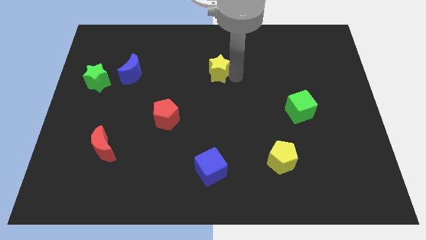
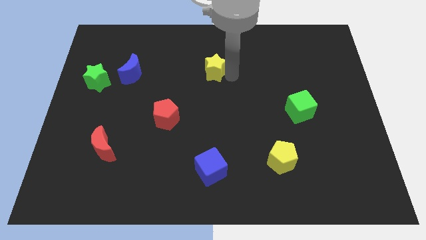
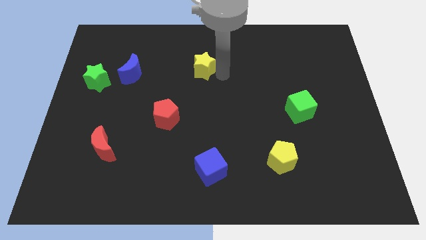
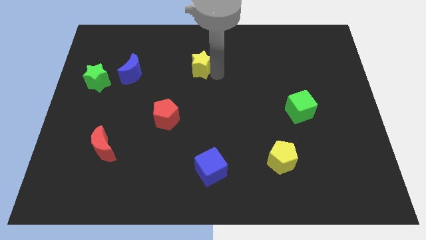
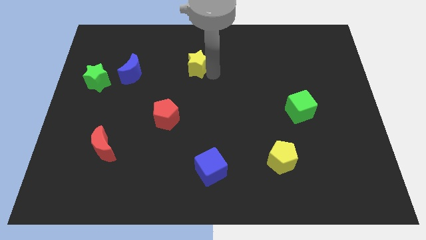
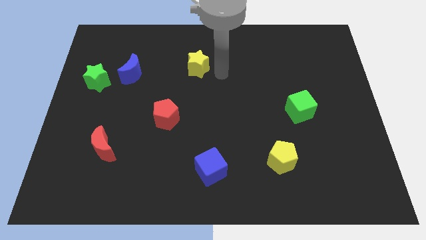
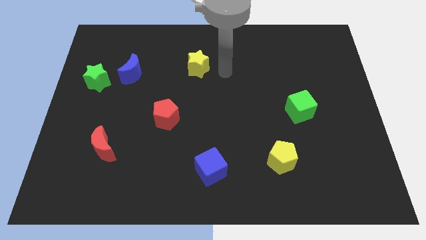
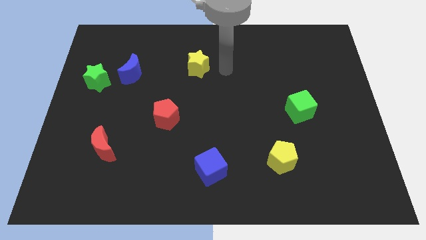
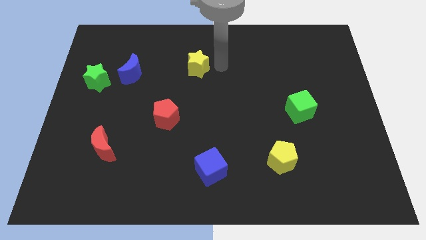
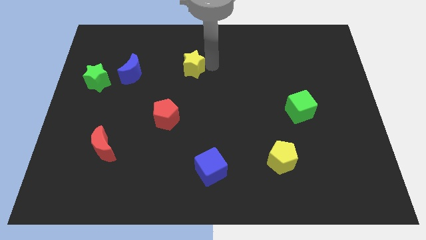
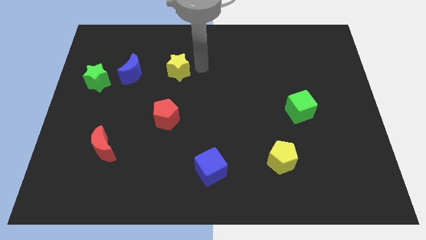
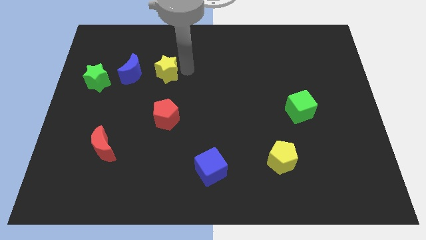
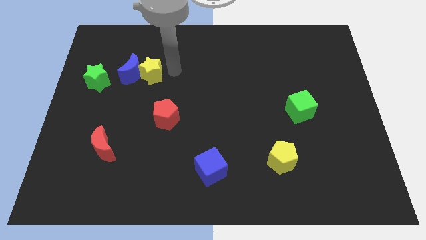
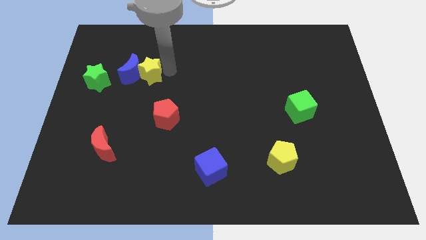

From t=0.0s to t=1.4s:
move the yellow star to the right of the blue crescent

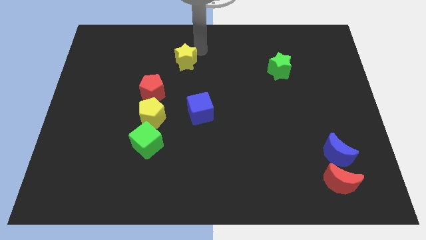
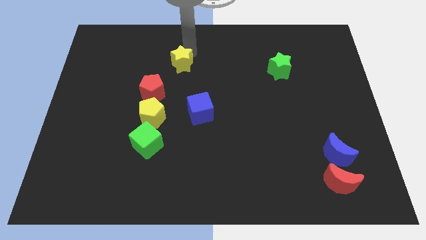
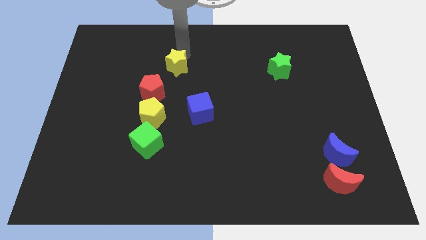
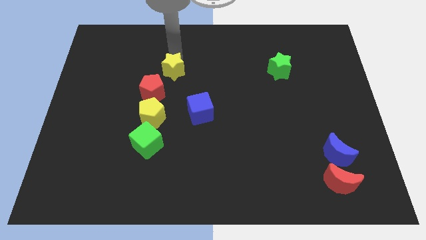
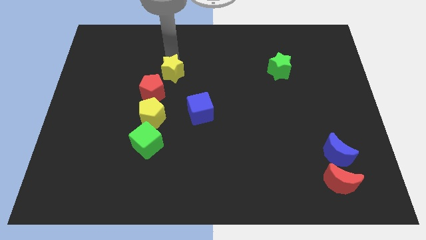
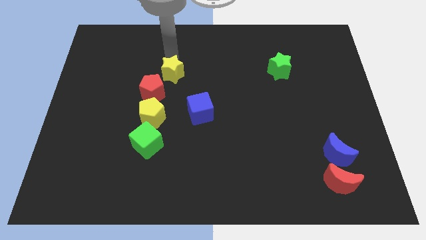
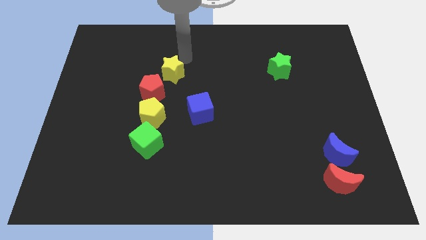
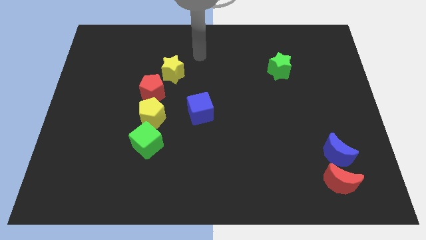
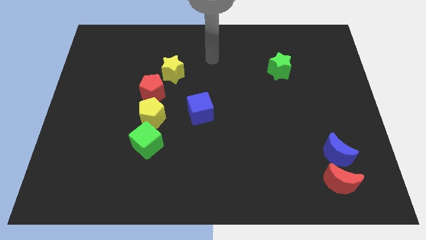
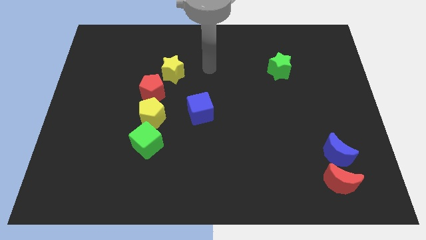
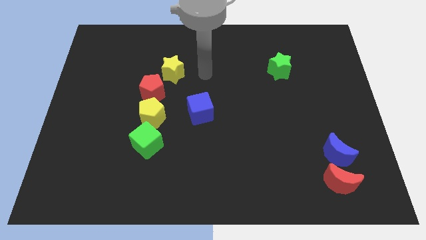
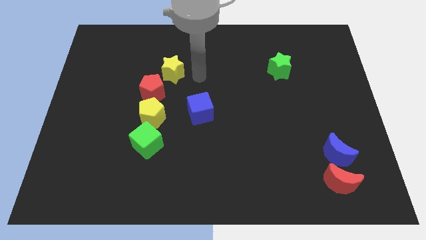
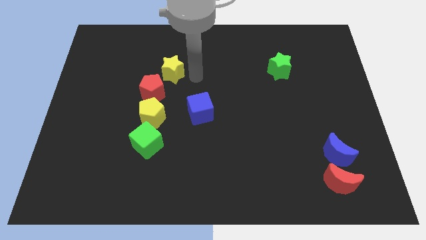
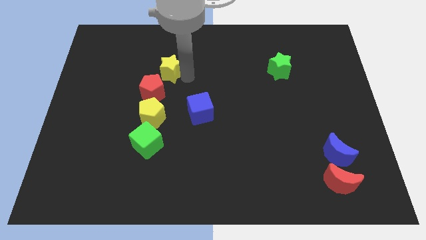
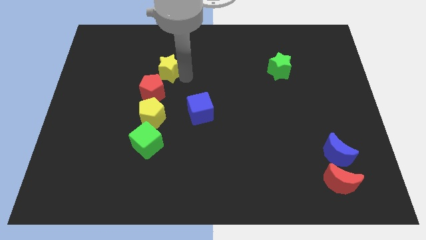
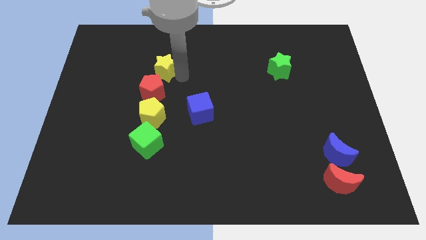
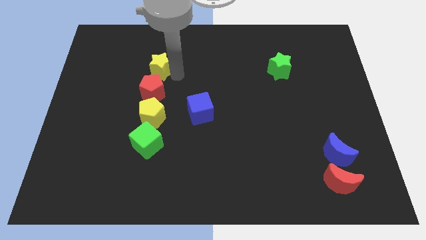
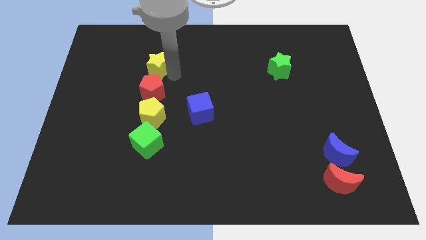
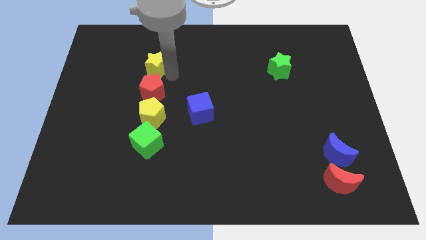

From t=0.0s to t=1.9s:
push the yellow star above the red pentagon

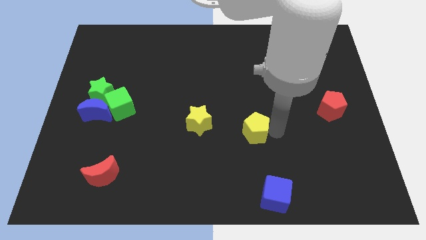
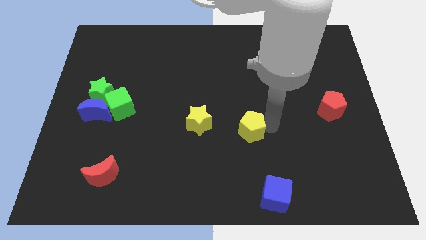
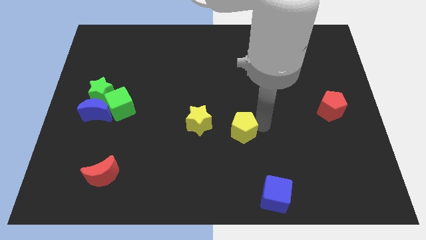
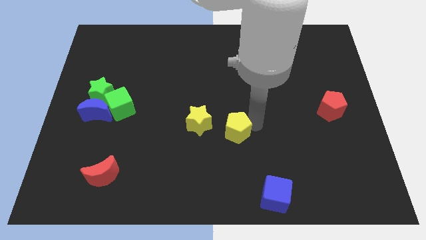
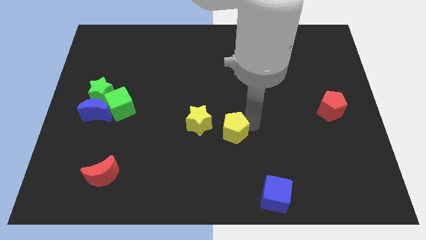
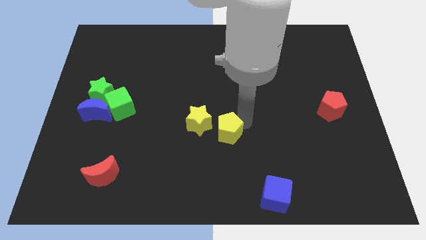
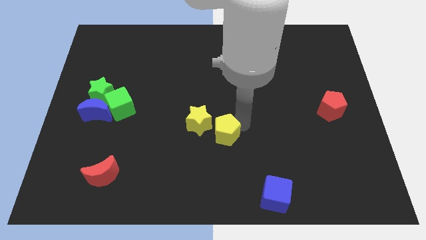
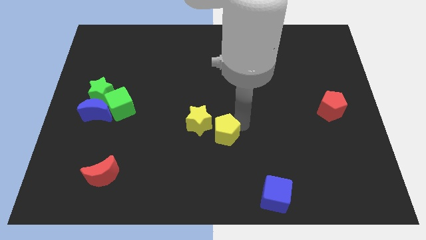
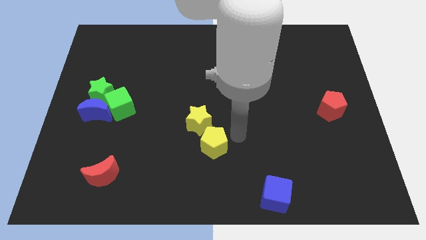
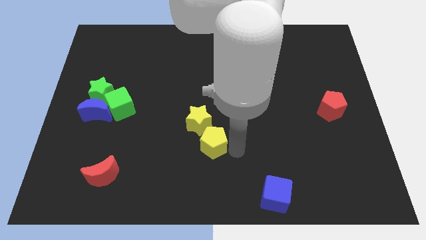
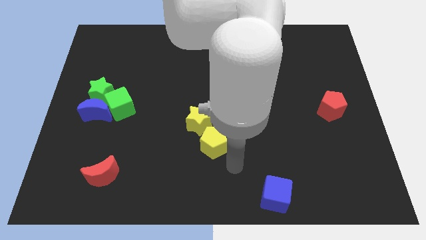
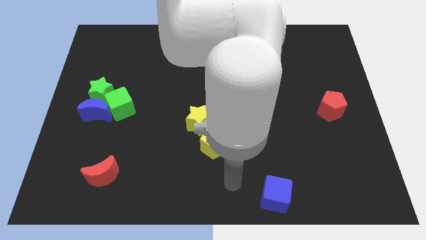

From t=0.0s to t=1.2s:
place yellow pentagon diagonally right below yellow star

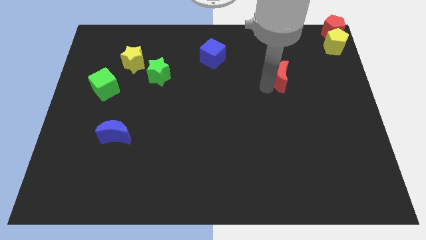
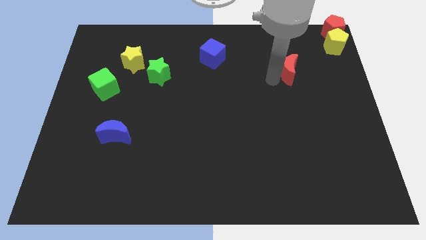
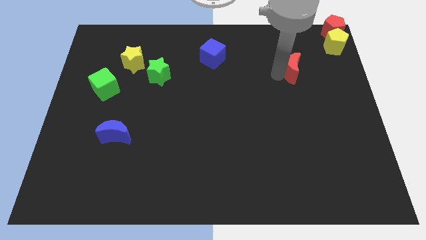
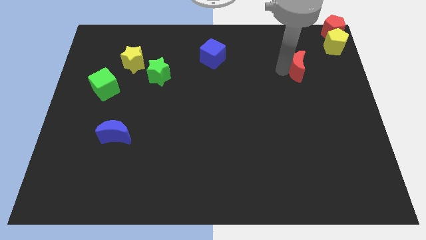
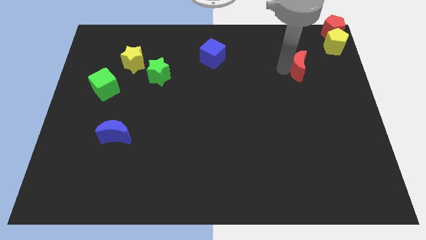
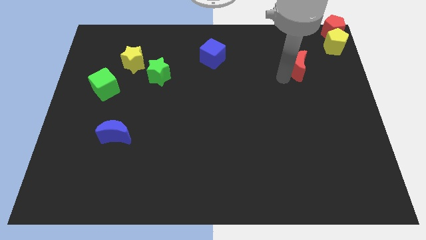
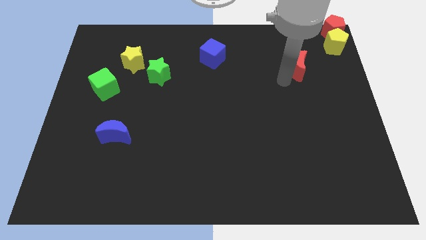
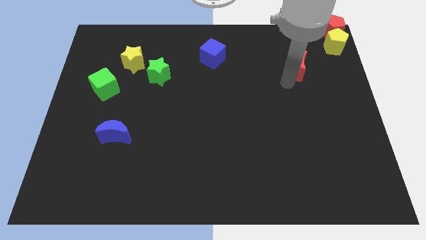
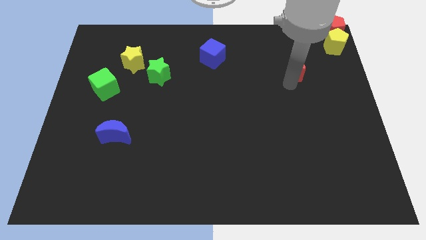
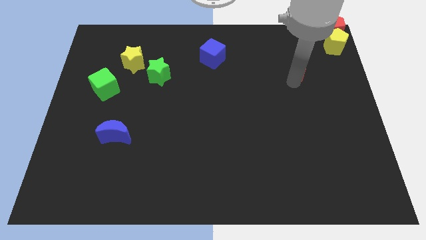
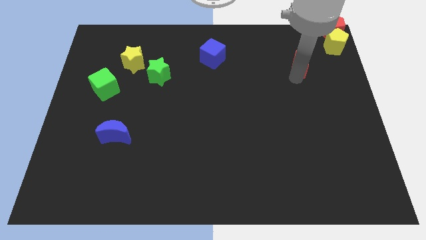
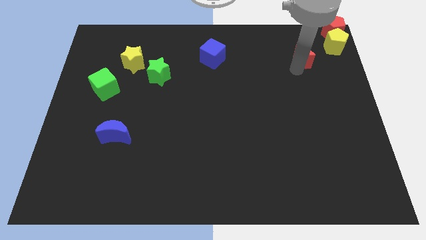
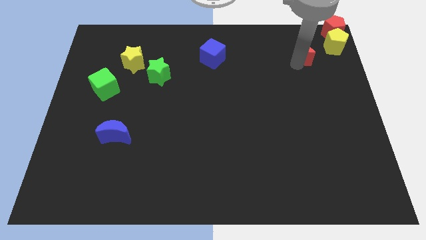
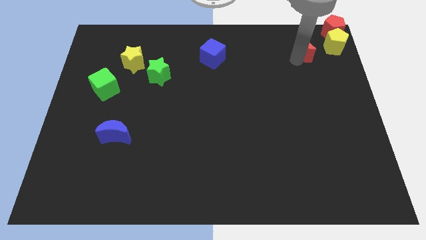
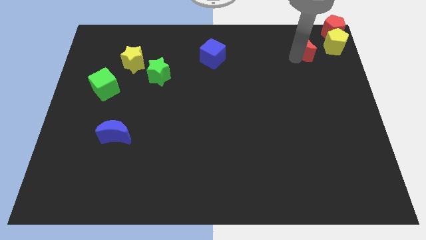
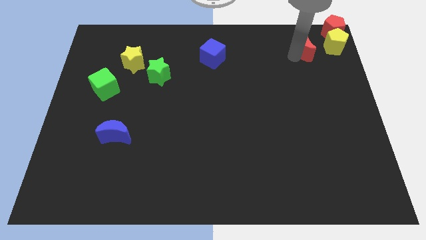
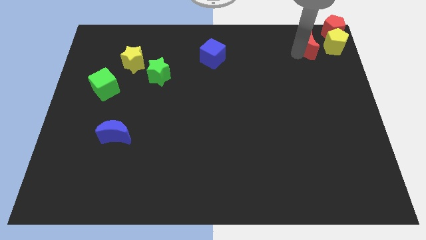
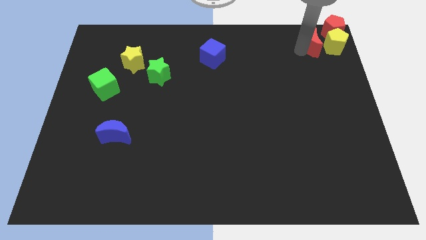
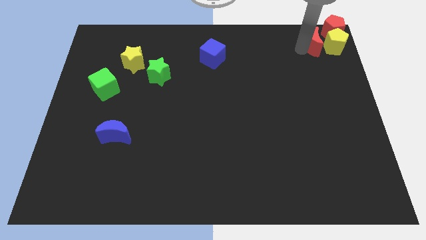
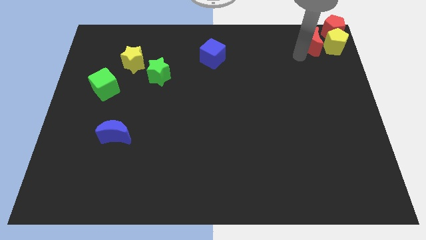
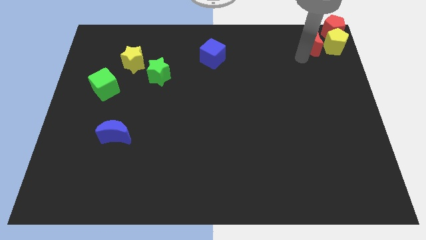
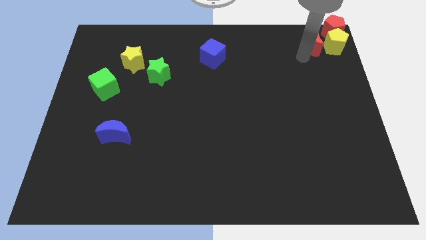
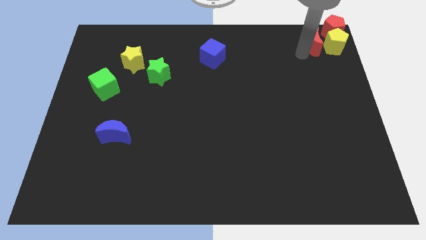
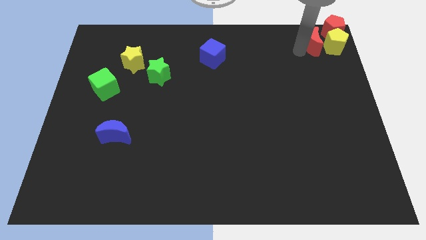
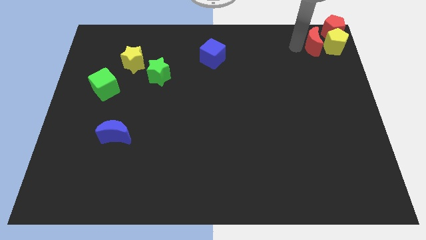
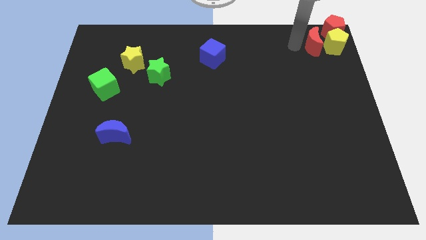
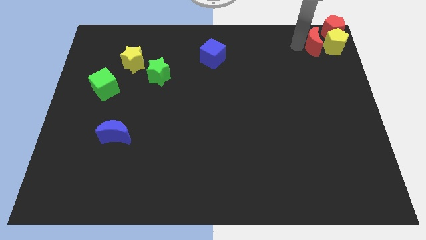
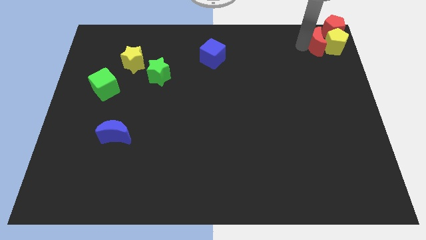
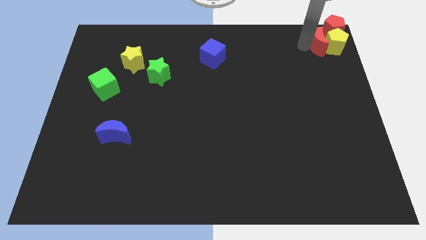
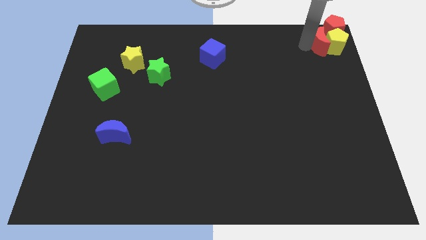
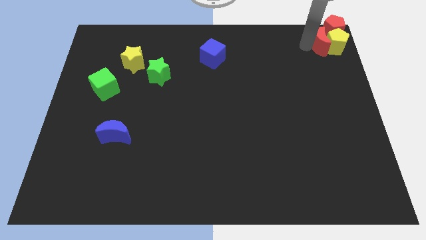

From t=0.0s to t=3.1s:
drag the red crescent into the left side of the yellow pentagon

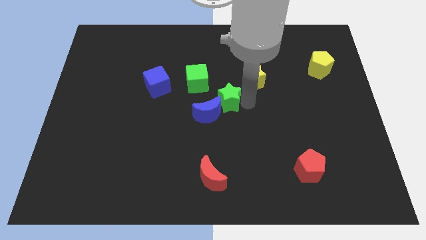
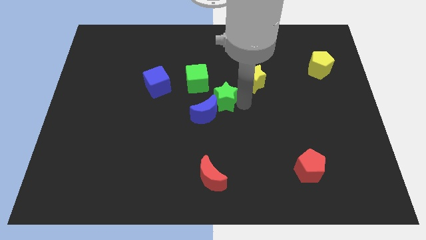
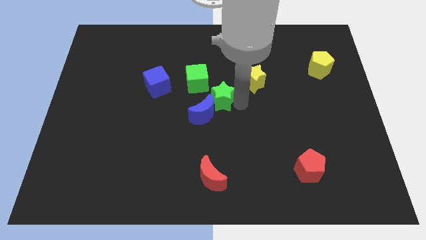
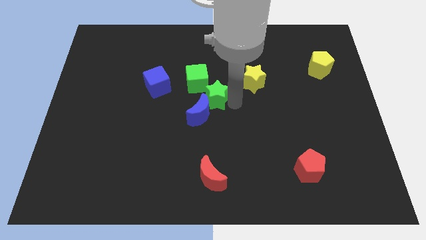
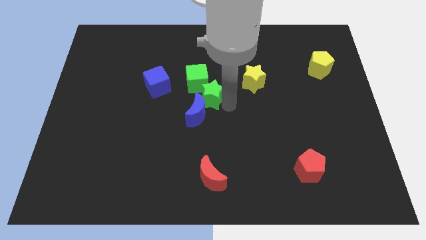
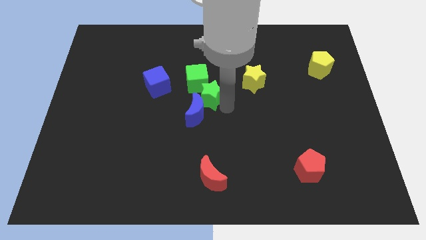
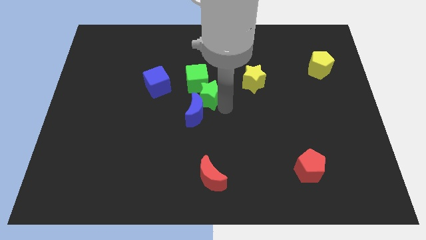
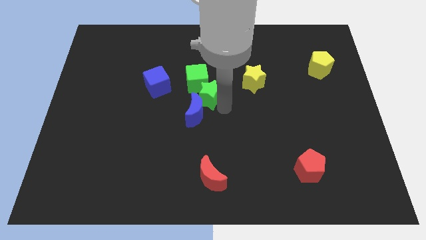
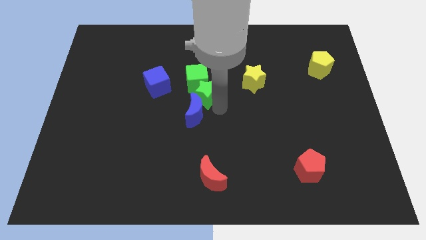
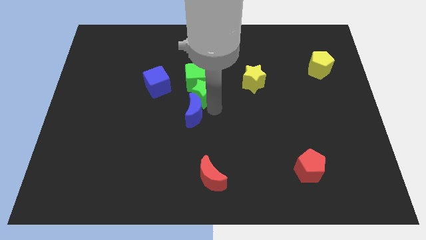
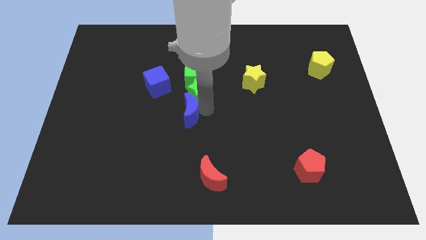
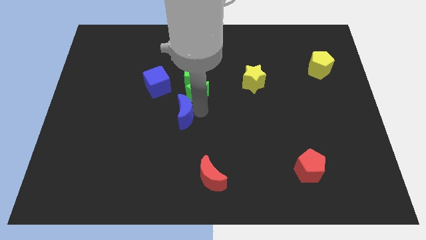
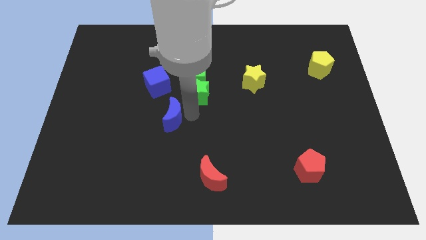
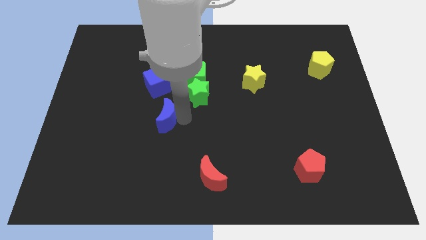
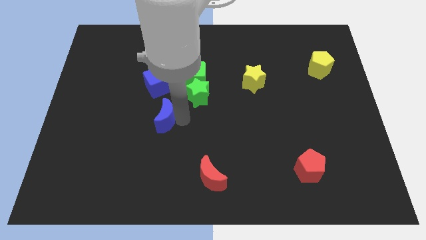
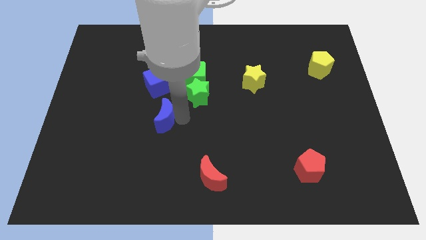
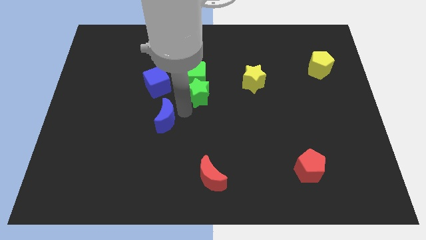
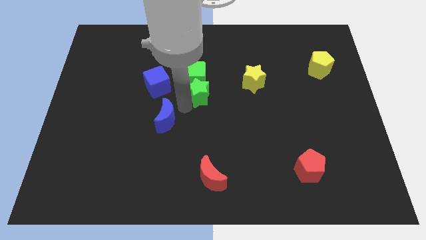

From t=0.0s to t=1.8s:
push the green star bottom to the green cube
